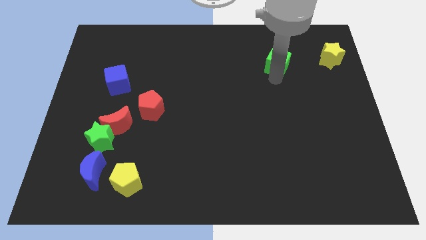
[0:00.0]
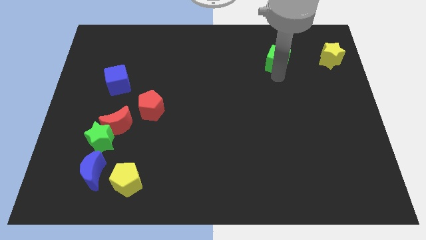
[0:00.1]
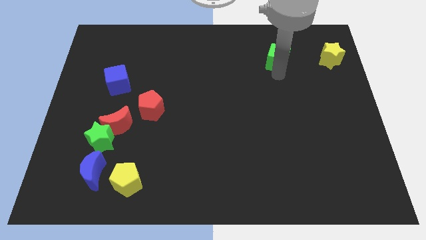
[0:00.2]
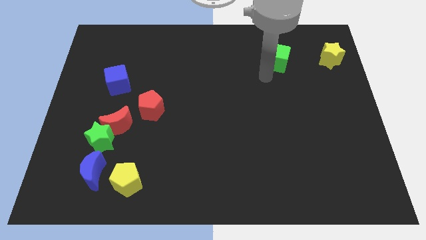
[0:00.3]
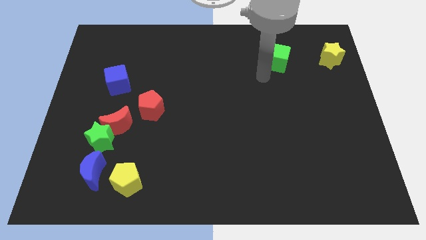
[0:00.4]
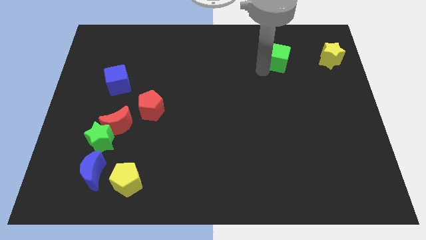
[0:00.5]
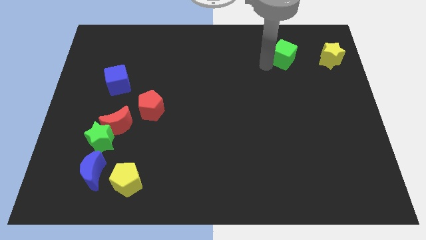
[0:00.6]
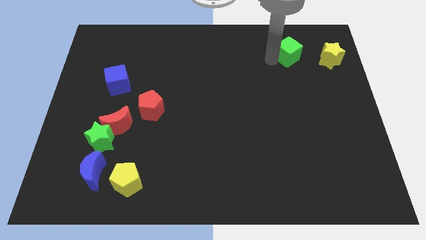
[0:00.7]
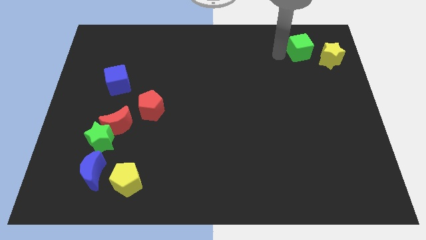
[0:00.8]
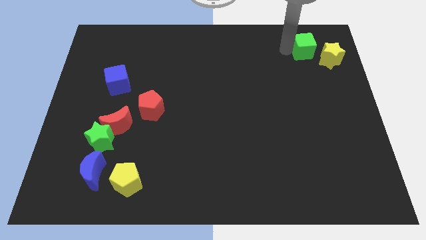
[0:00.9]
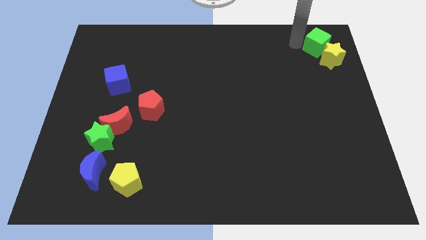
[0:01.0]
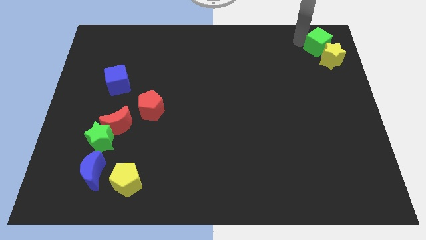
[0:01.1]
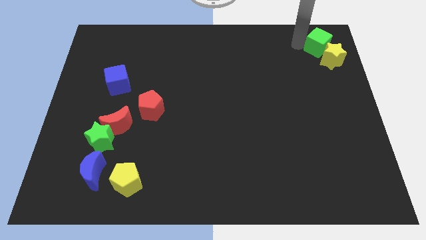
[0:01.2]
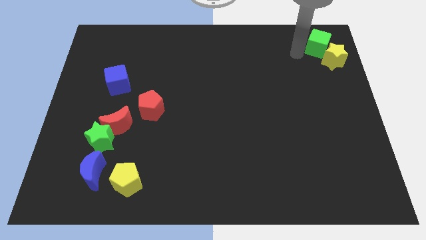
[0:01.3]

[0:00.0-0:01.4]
put the green cube at the top left of the yellow star

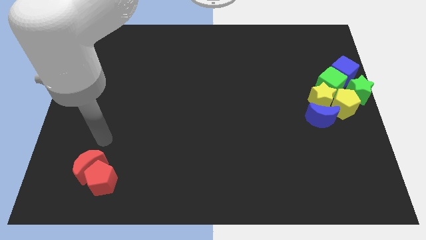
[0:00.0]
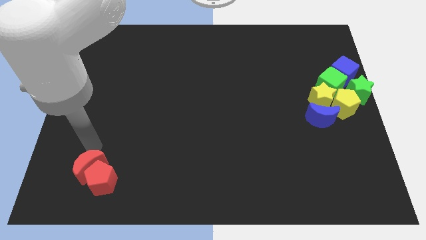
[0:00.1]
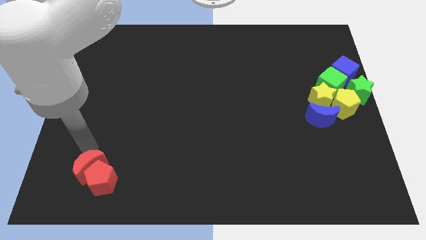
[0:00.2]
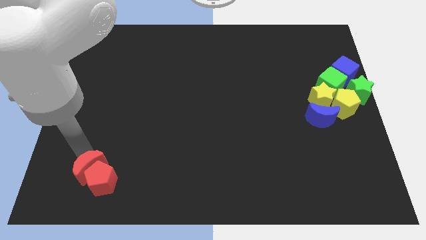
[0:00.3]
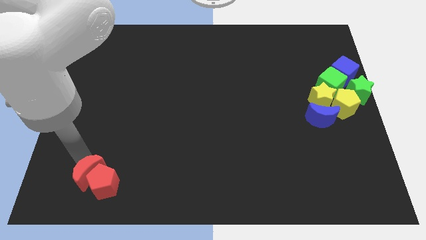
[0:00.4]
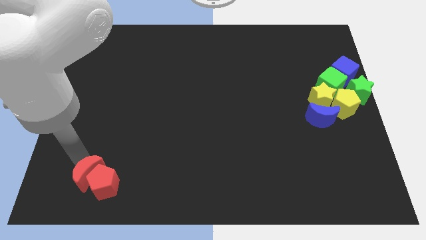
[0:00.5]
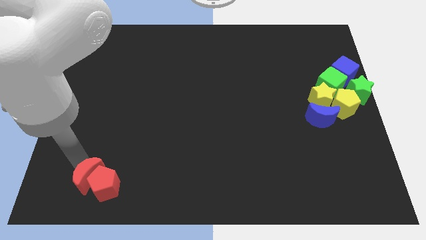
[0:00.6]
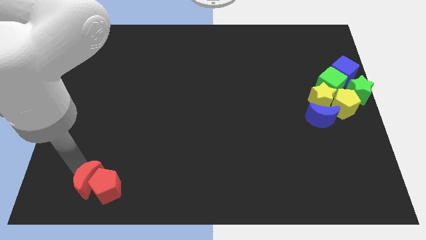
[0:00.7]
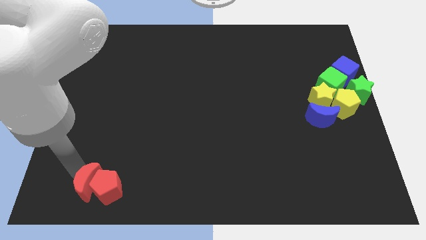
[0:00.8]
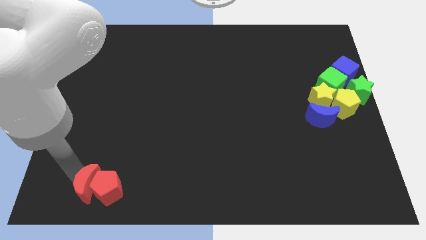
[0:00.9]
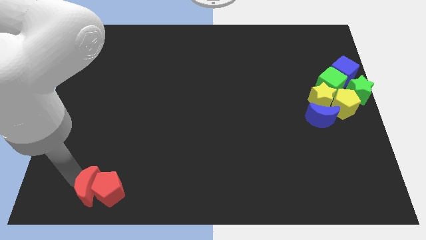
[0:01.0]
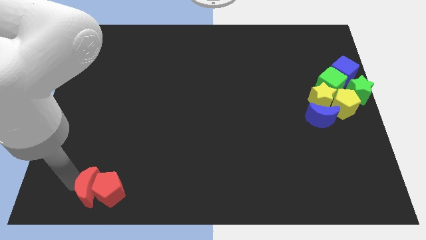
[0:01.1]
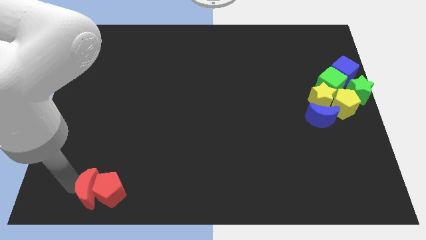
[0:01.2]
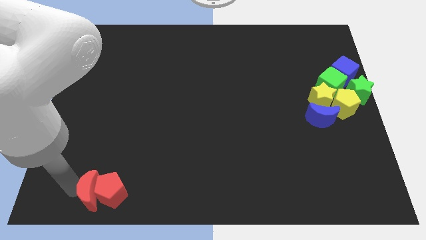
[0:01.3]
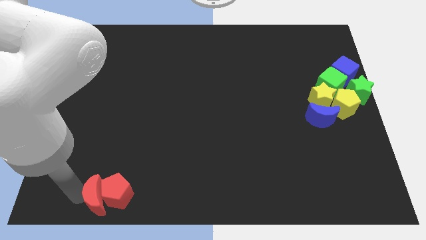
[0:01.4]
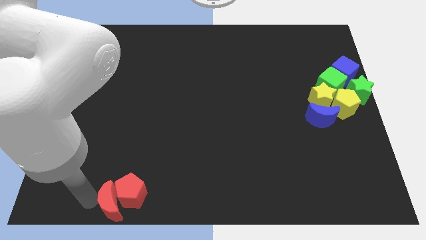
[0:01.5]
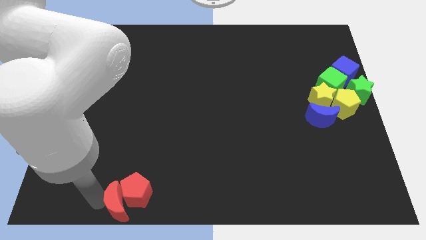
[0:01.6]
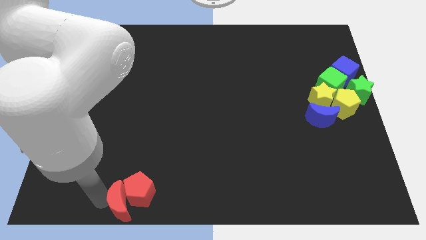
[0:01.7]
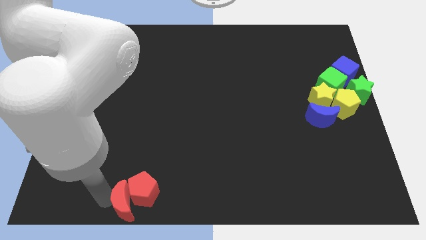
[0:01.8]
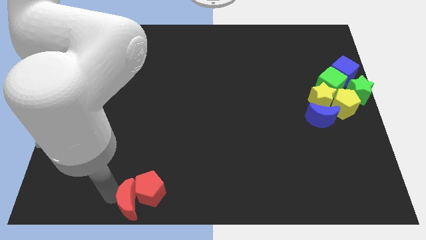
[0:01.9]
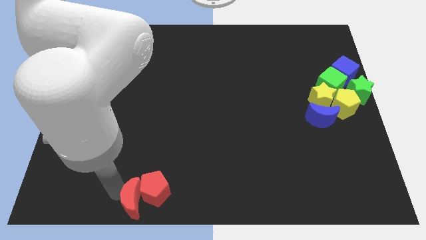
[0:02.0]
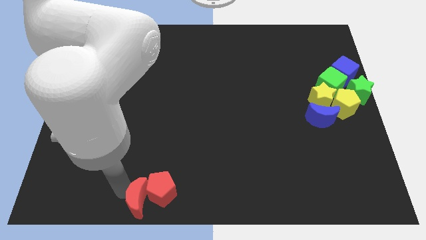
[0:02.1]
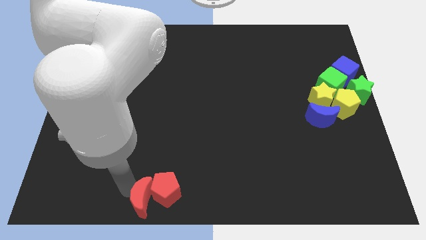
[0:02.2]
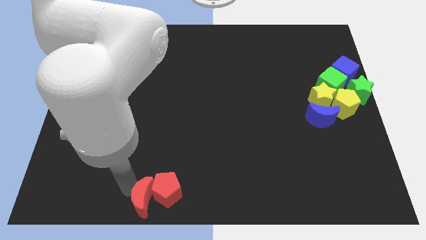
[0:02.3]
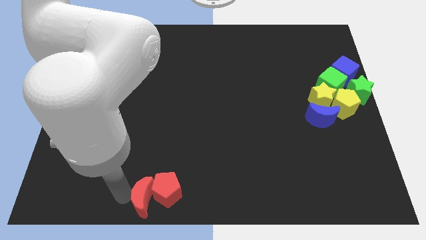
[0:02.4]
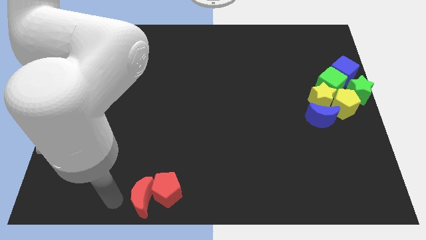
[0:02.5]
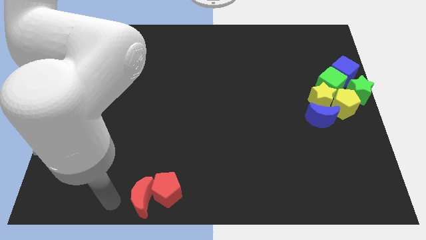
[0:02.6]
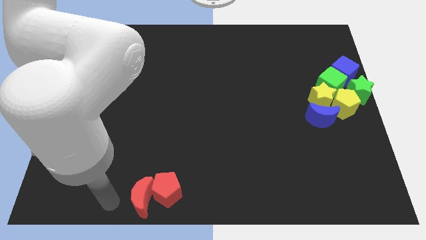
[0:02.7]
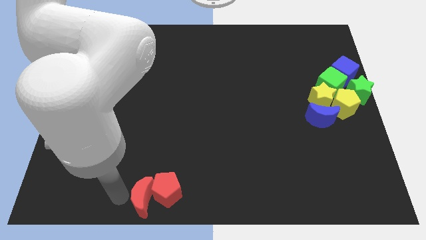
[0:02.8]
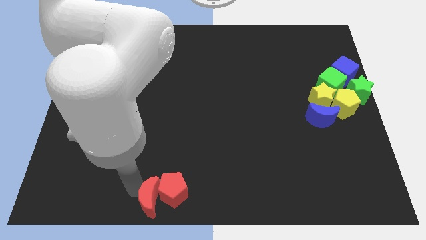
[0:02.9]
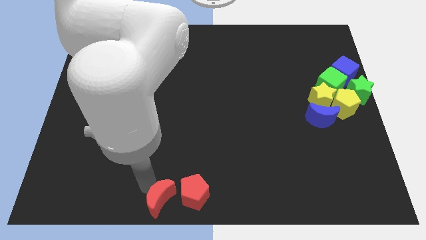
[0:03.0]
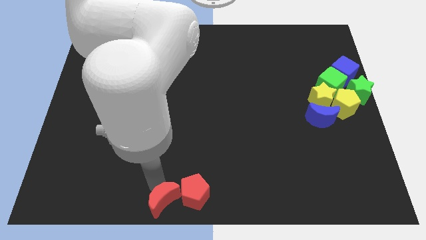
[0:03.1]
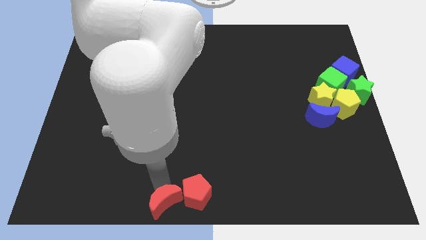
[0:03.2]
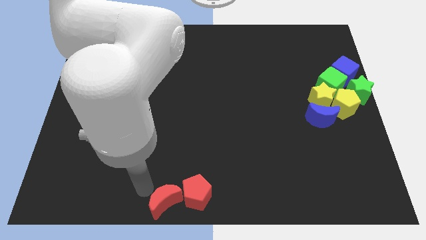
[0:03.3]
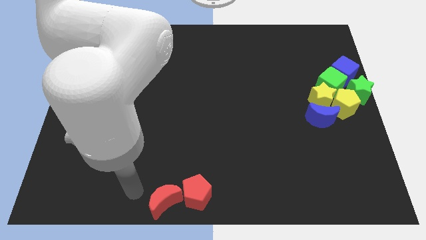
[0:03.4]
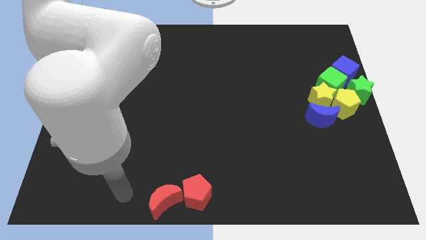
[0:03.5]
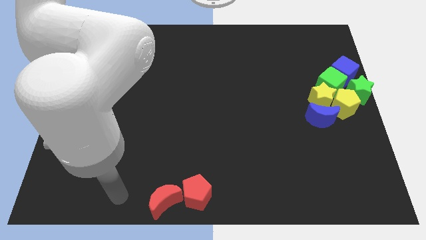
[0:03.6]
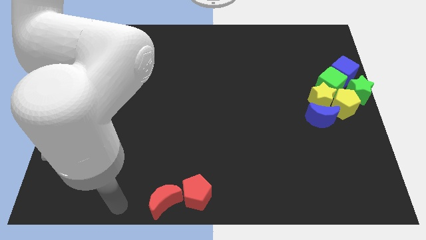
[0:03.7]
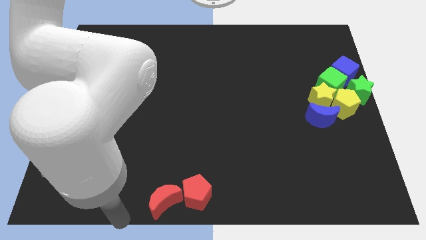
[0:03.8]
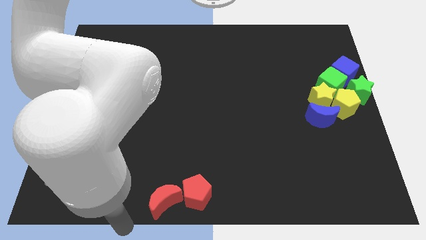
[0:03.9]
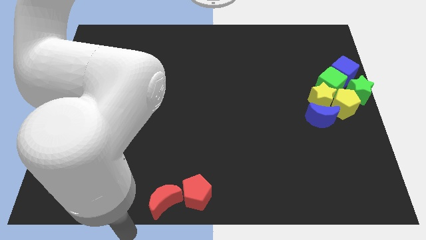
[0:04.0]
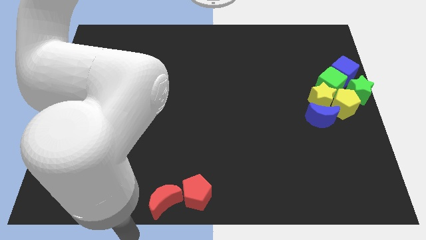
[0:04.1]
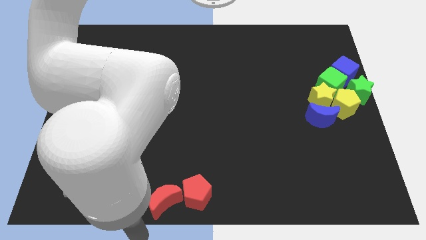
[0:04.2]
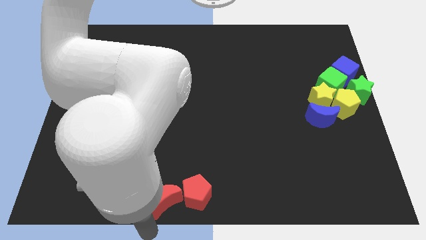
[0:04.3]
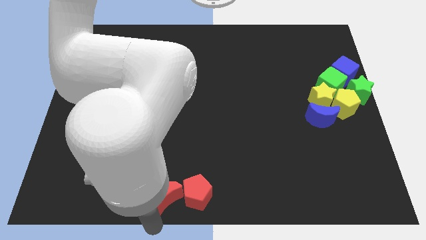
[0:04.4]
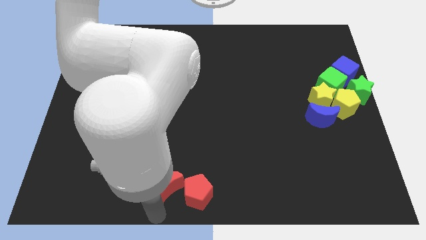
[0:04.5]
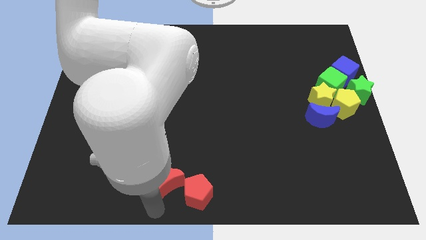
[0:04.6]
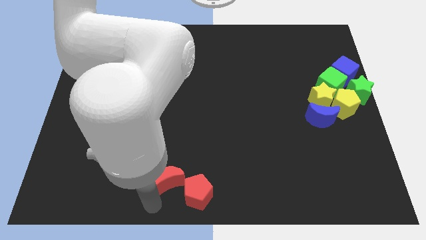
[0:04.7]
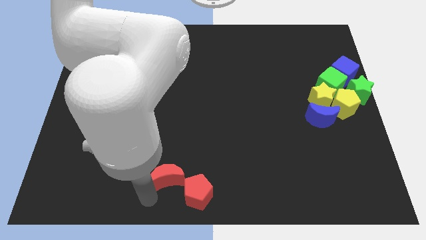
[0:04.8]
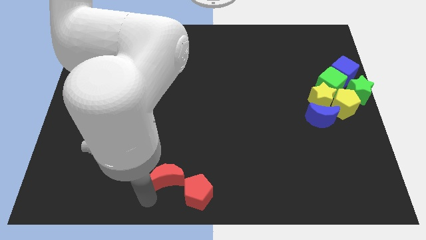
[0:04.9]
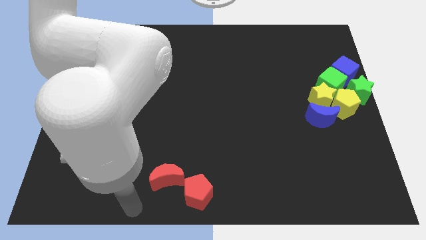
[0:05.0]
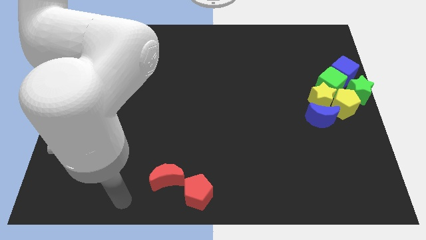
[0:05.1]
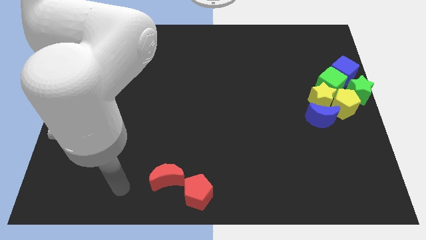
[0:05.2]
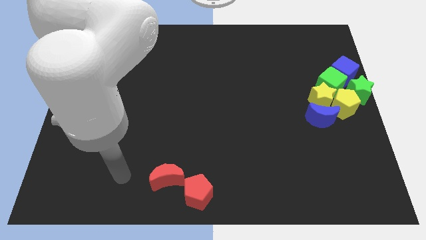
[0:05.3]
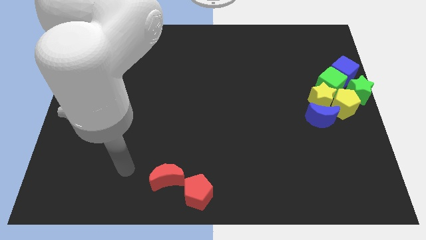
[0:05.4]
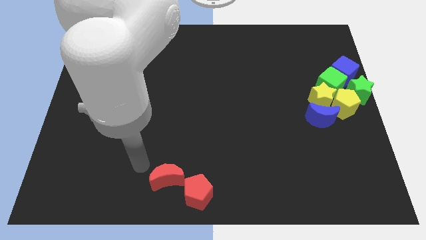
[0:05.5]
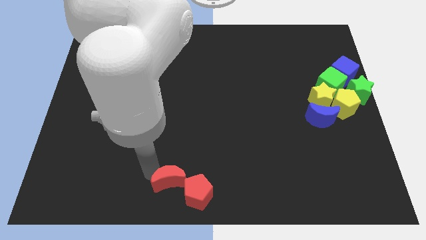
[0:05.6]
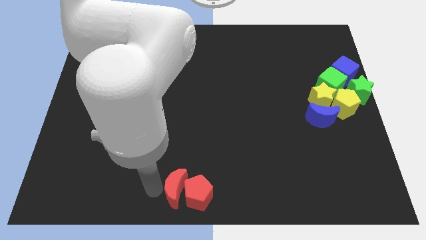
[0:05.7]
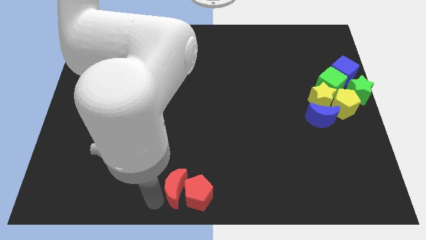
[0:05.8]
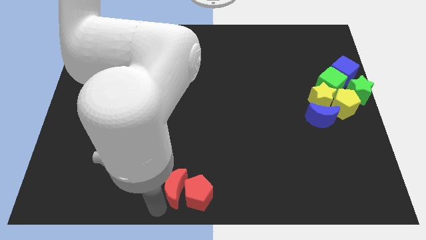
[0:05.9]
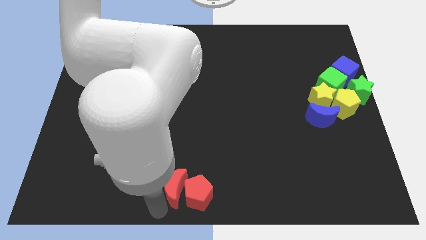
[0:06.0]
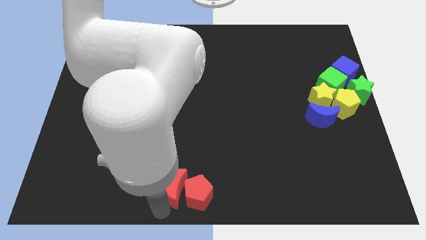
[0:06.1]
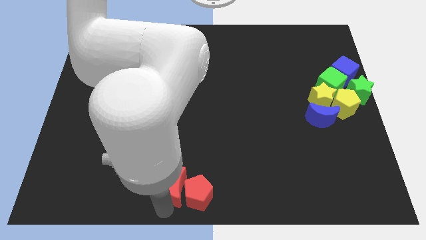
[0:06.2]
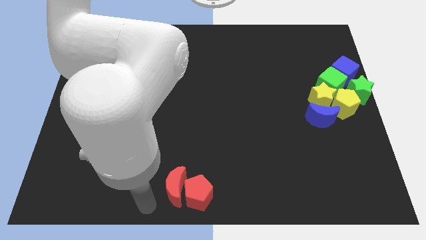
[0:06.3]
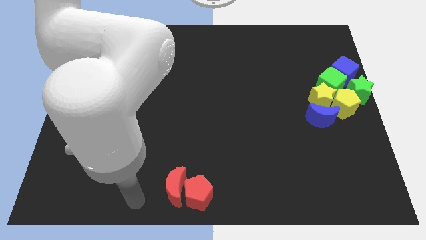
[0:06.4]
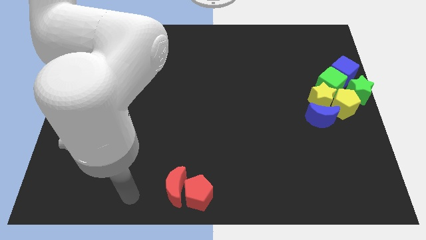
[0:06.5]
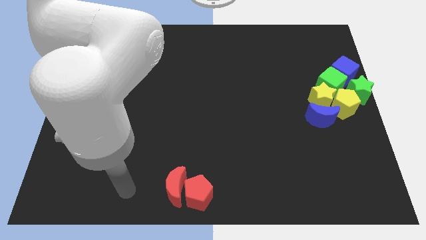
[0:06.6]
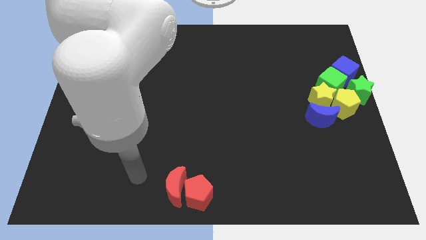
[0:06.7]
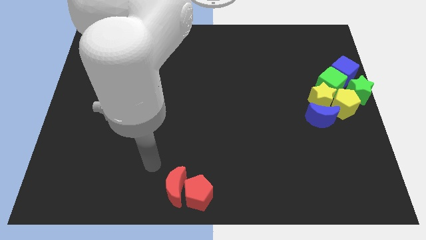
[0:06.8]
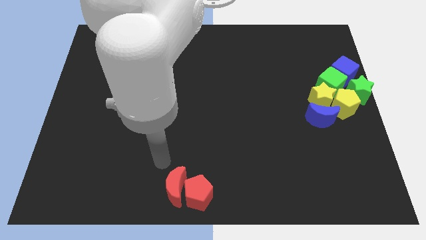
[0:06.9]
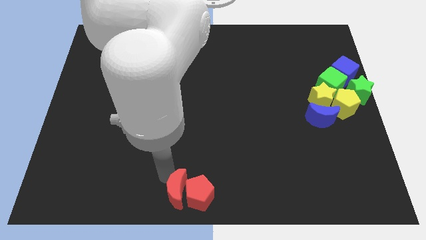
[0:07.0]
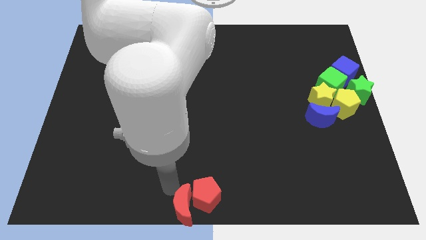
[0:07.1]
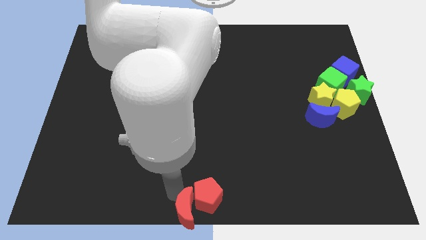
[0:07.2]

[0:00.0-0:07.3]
drag the red pentagon with the help of red crescent to the bottom center of the board

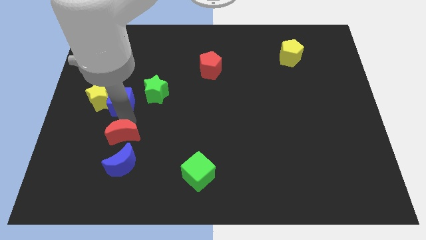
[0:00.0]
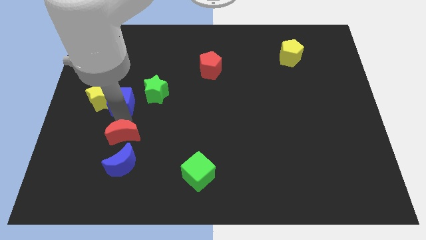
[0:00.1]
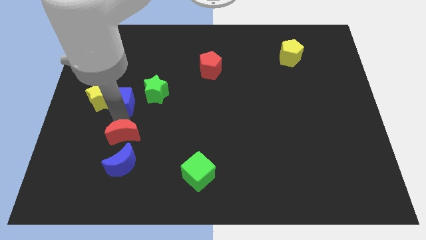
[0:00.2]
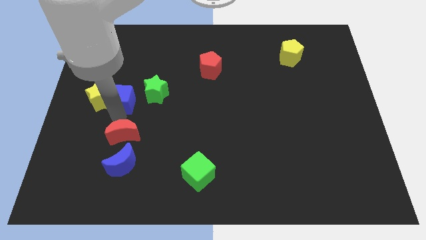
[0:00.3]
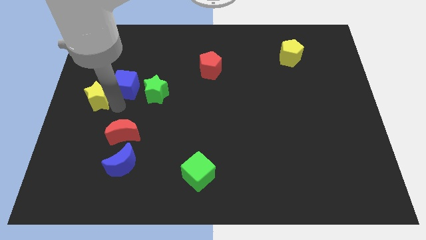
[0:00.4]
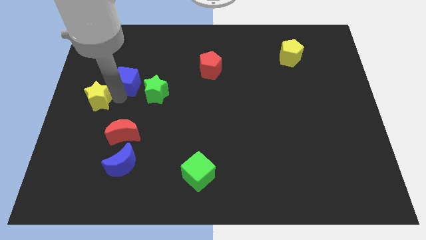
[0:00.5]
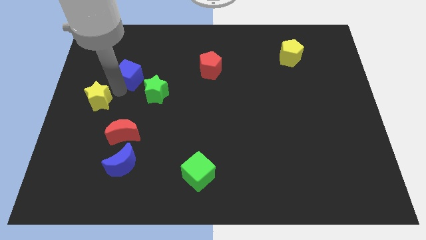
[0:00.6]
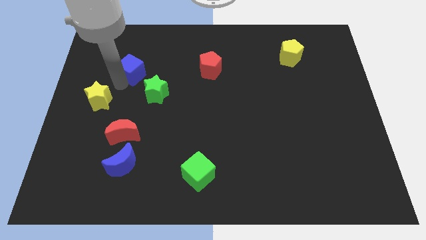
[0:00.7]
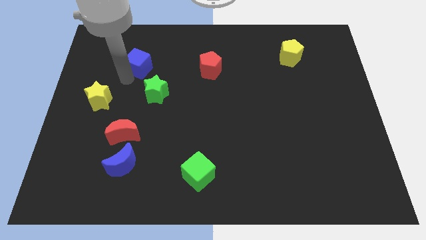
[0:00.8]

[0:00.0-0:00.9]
move blue cube away from yellow star
